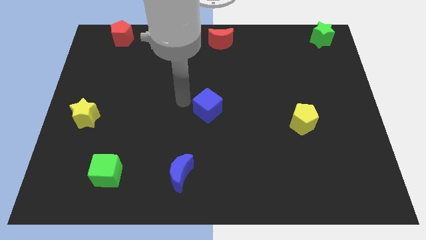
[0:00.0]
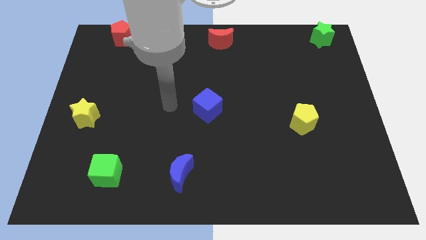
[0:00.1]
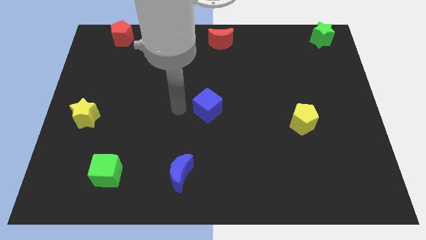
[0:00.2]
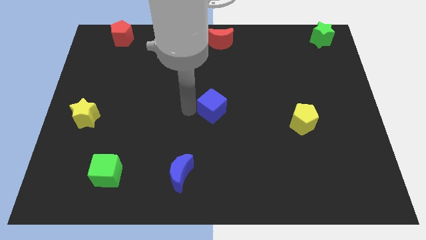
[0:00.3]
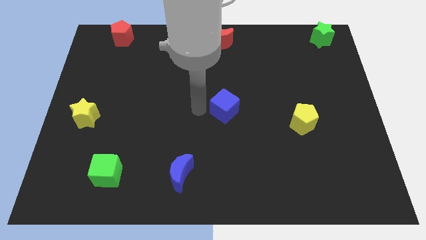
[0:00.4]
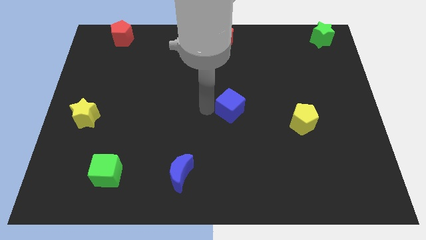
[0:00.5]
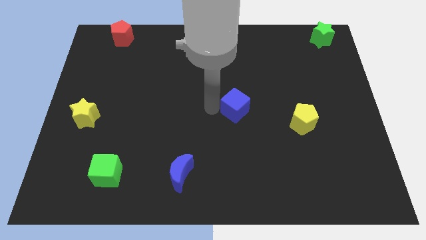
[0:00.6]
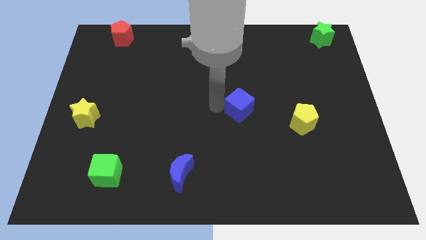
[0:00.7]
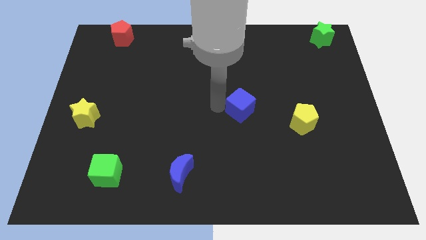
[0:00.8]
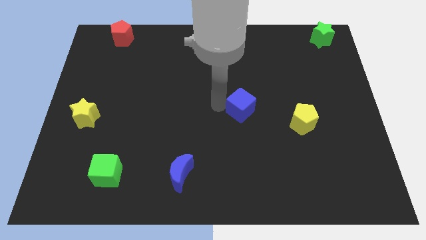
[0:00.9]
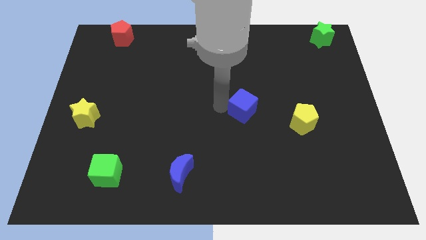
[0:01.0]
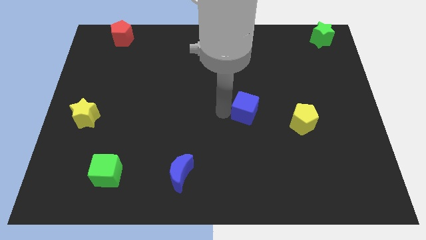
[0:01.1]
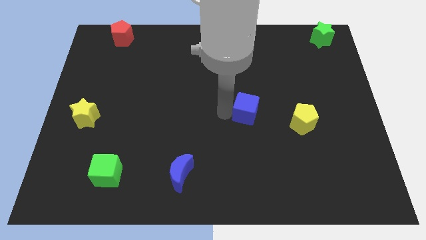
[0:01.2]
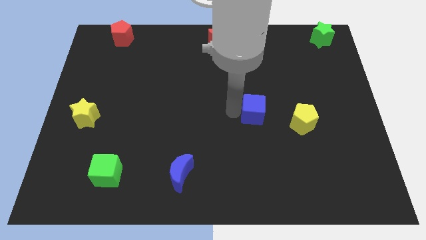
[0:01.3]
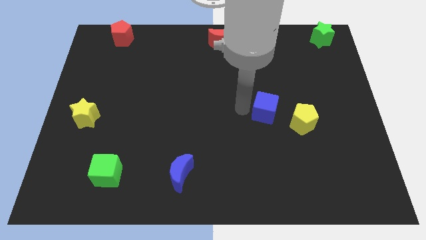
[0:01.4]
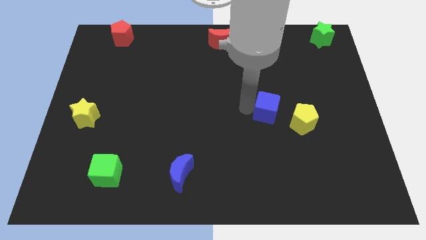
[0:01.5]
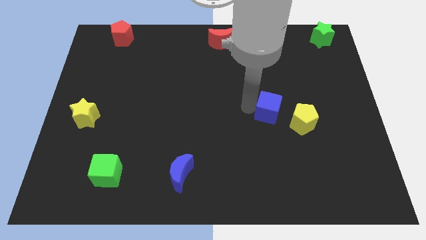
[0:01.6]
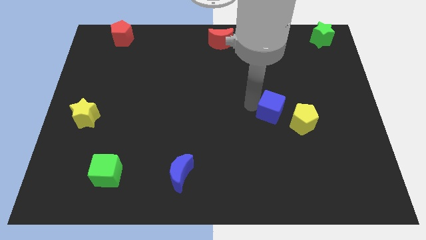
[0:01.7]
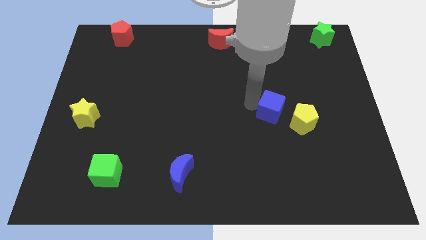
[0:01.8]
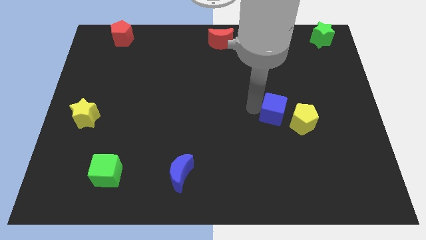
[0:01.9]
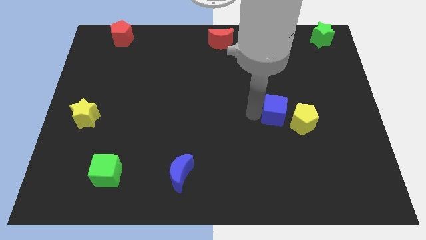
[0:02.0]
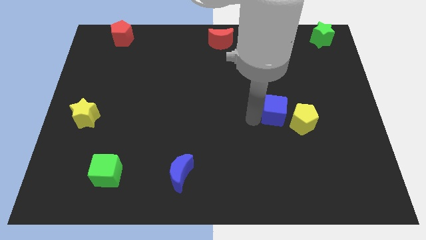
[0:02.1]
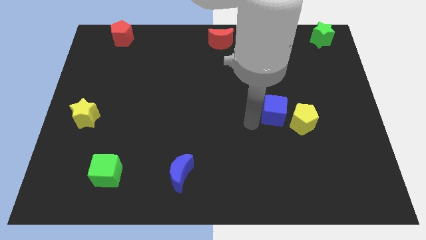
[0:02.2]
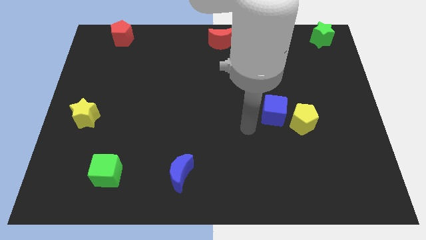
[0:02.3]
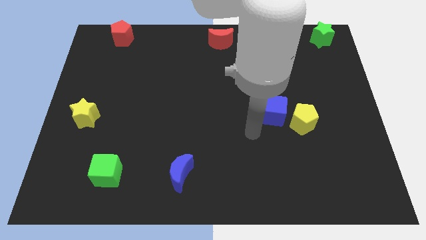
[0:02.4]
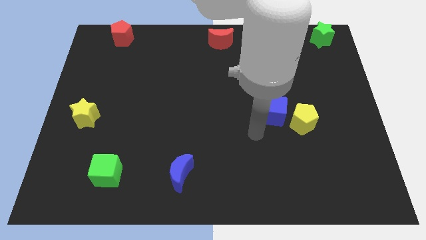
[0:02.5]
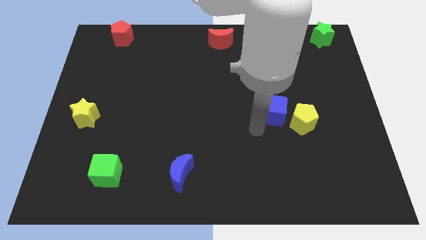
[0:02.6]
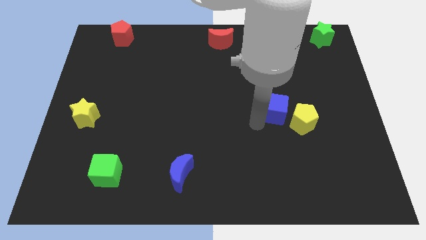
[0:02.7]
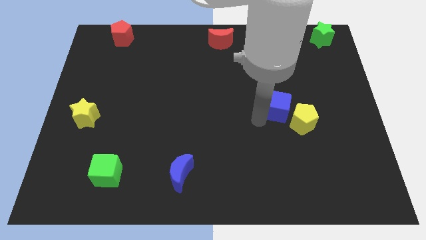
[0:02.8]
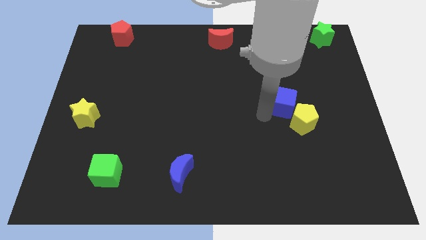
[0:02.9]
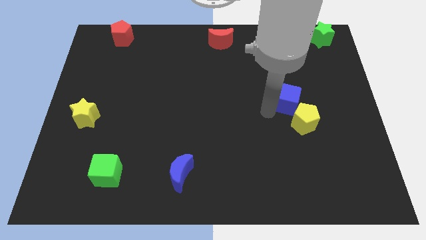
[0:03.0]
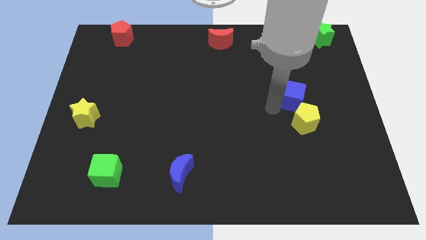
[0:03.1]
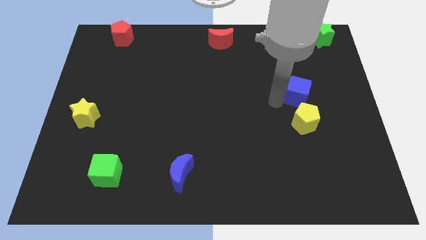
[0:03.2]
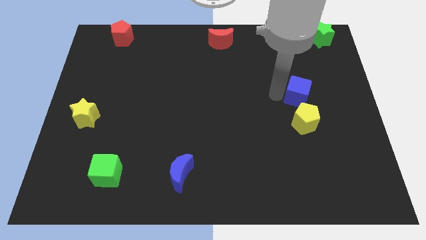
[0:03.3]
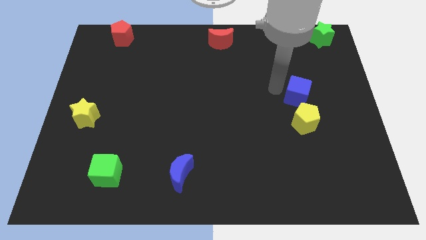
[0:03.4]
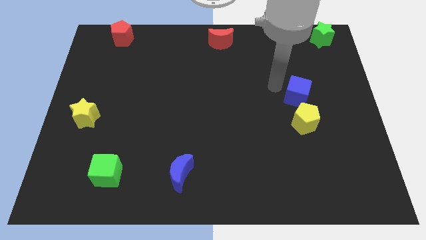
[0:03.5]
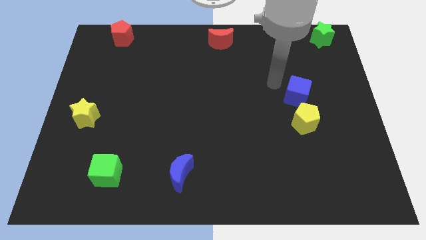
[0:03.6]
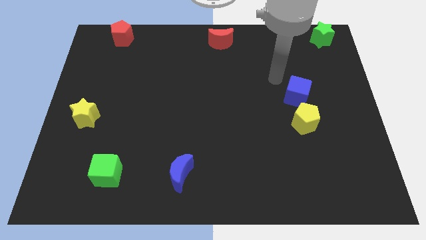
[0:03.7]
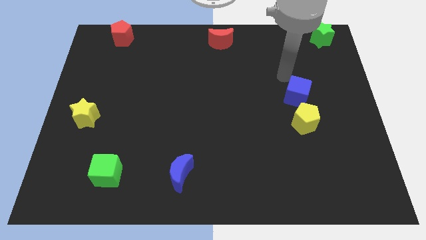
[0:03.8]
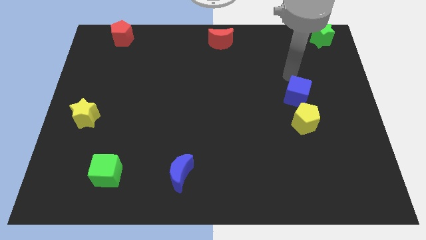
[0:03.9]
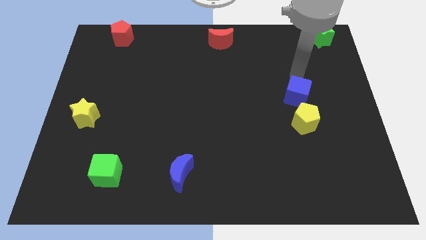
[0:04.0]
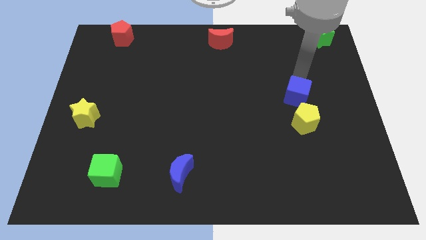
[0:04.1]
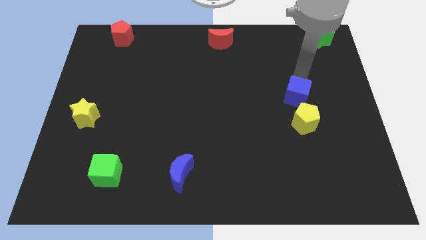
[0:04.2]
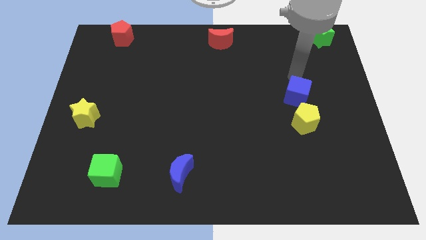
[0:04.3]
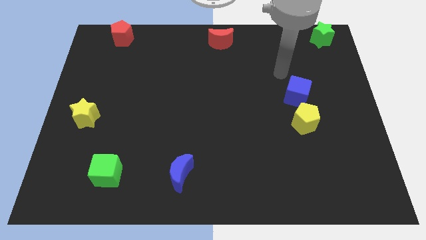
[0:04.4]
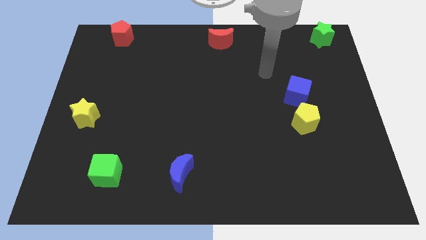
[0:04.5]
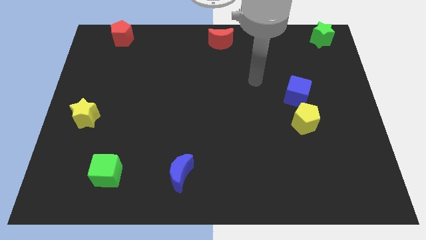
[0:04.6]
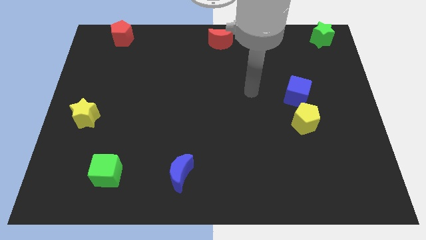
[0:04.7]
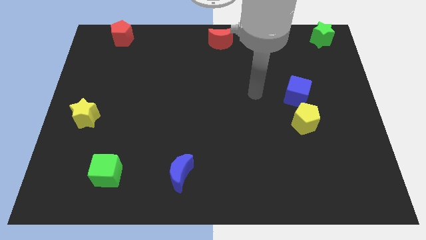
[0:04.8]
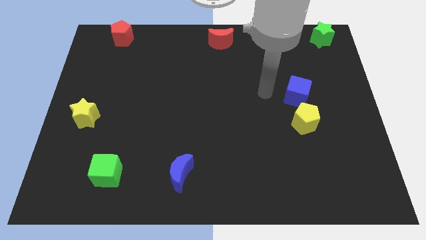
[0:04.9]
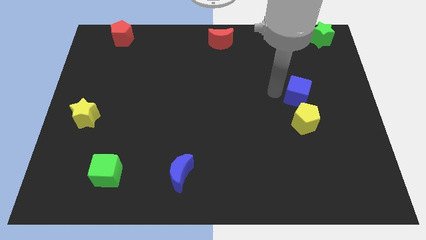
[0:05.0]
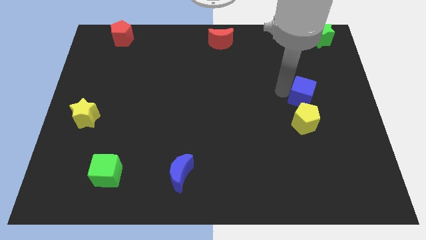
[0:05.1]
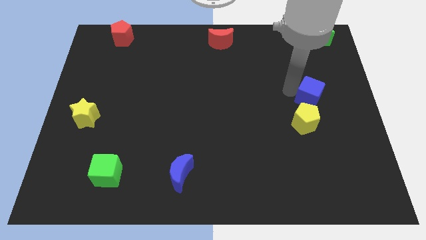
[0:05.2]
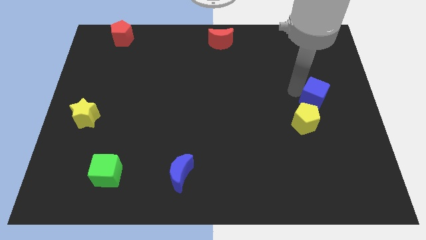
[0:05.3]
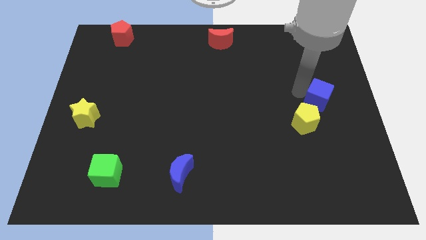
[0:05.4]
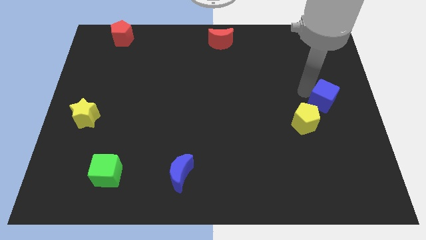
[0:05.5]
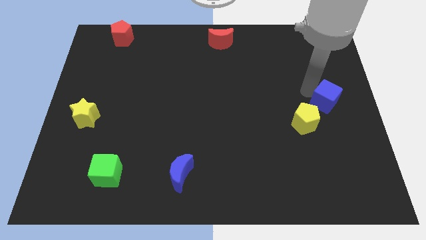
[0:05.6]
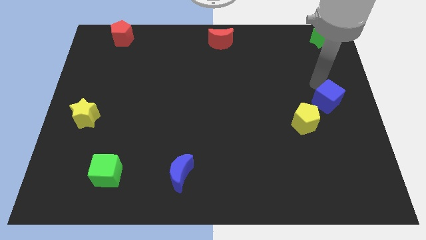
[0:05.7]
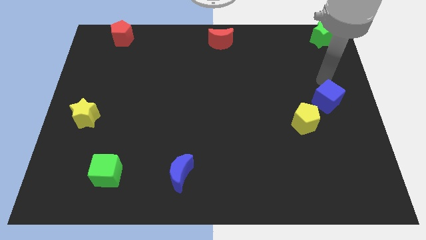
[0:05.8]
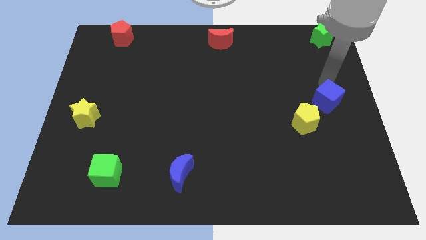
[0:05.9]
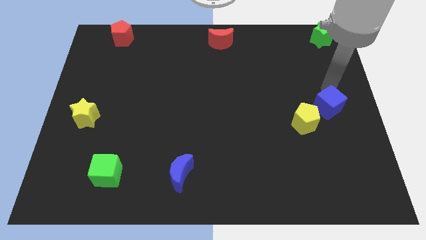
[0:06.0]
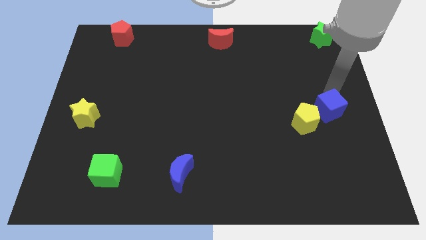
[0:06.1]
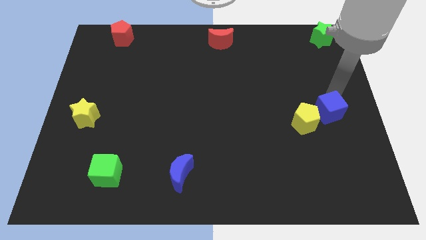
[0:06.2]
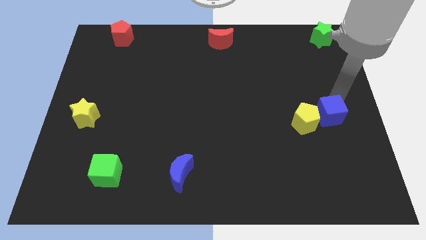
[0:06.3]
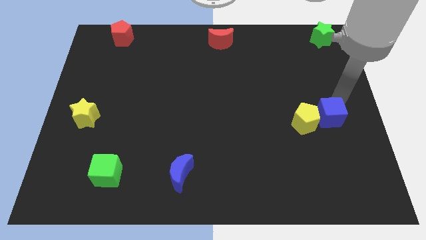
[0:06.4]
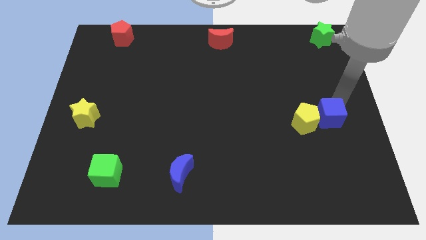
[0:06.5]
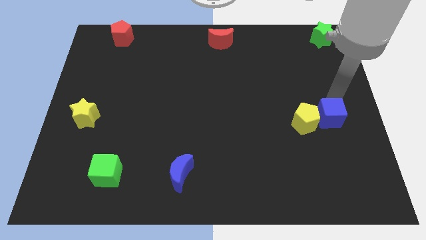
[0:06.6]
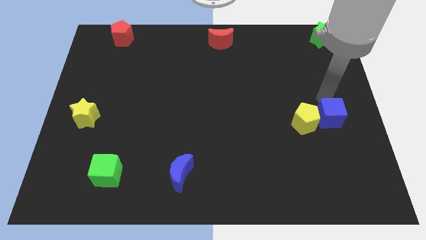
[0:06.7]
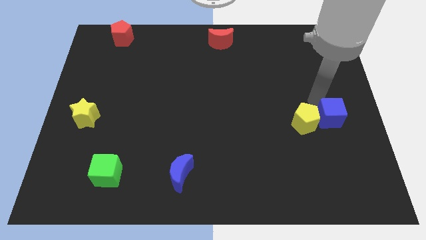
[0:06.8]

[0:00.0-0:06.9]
put the blue cube on the right side of the yellow pentagon

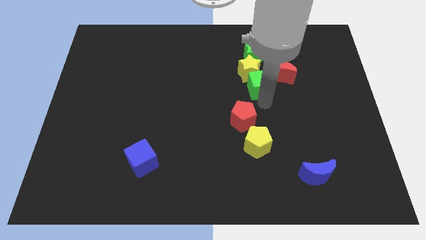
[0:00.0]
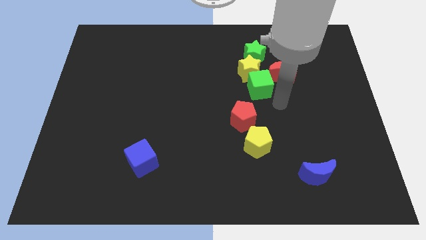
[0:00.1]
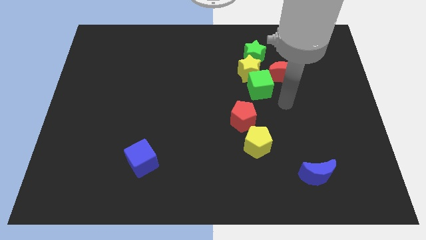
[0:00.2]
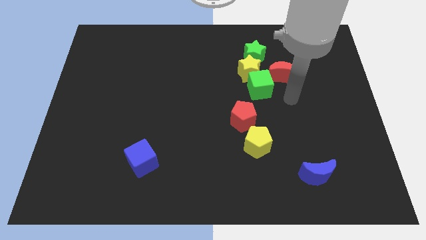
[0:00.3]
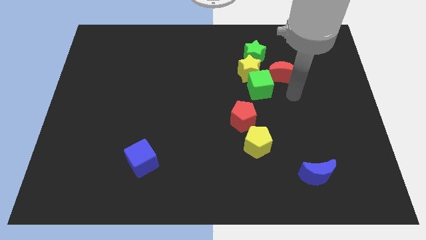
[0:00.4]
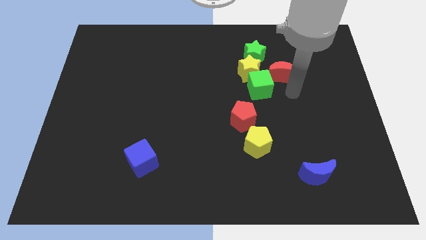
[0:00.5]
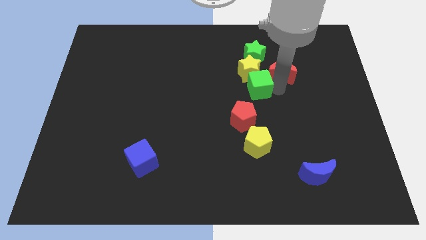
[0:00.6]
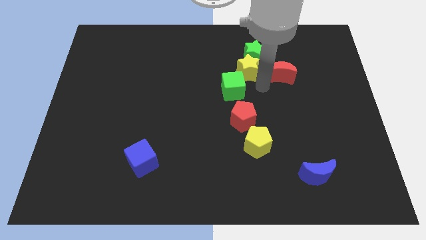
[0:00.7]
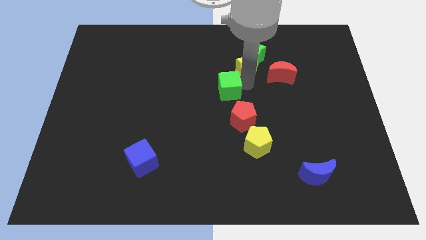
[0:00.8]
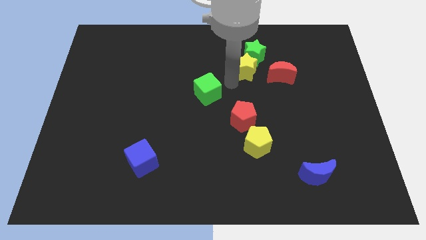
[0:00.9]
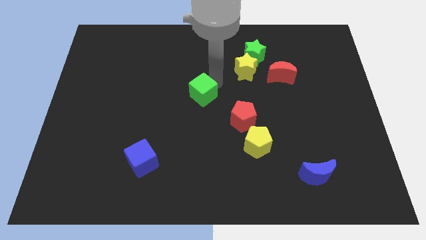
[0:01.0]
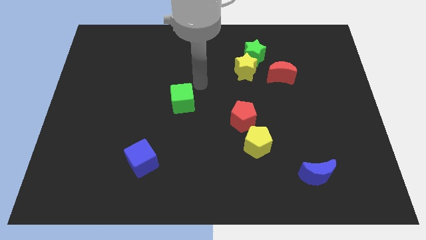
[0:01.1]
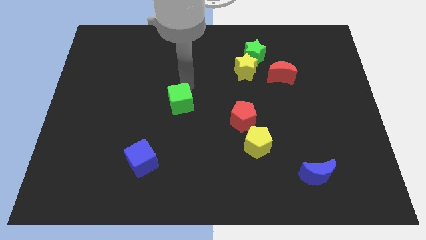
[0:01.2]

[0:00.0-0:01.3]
push green cube away from yellow star

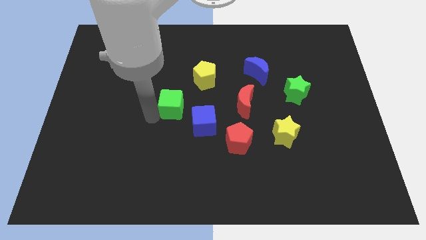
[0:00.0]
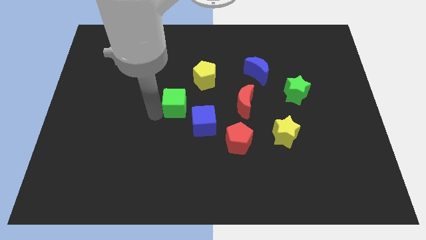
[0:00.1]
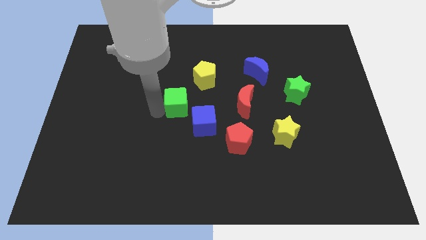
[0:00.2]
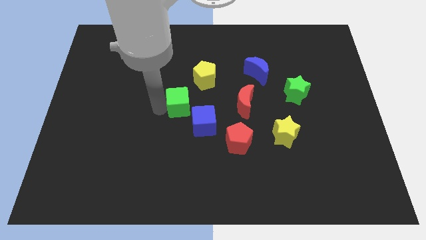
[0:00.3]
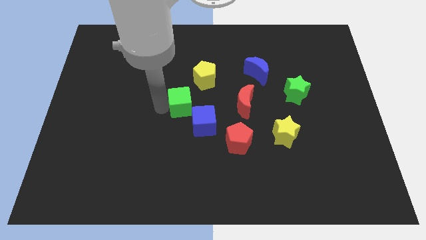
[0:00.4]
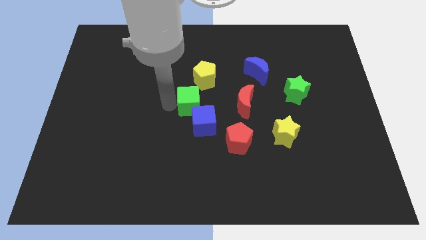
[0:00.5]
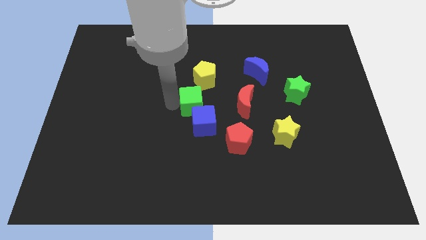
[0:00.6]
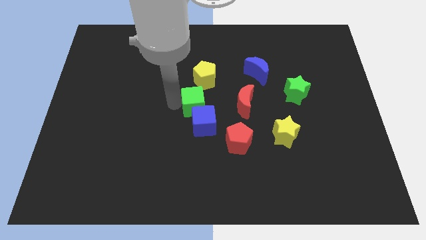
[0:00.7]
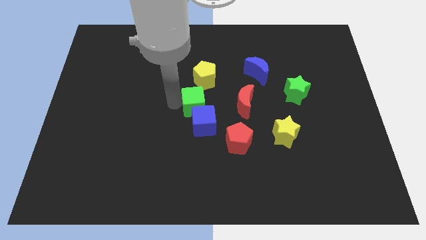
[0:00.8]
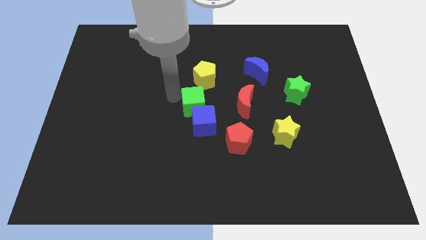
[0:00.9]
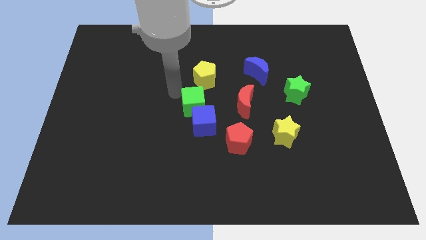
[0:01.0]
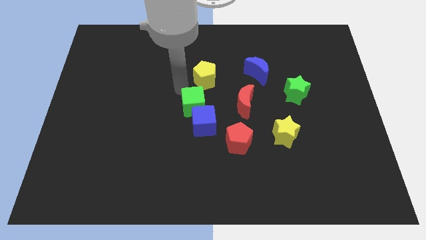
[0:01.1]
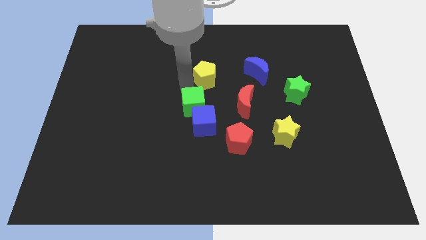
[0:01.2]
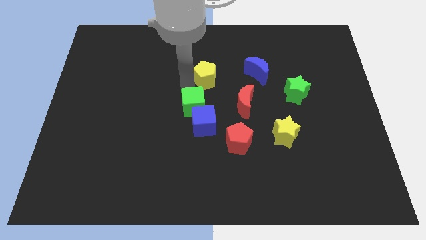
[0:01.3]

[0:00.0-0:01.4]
slide the green cube to the top left side of the blue cube
